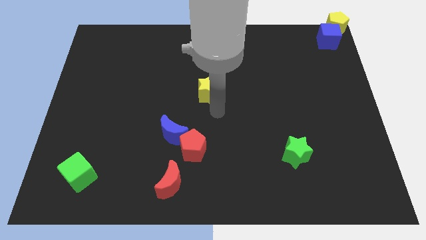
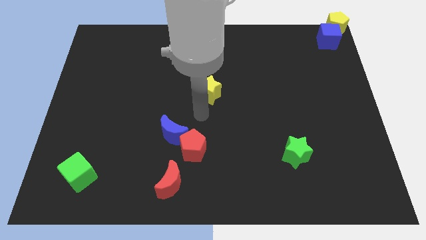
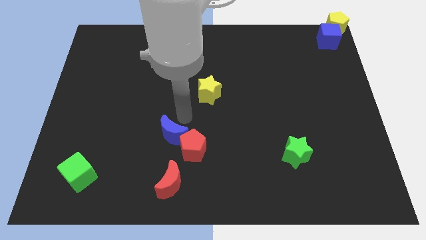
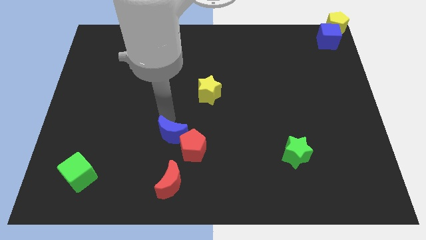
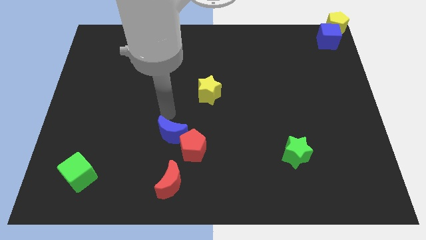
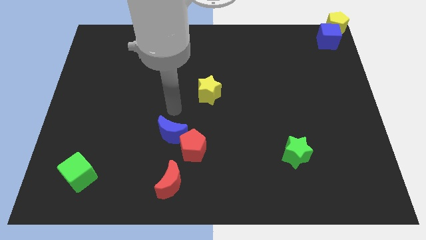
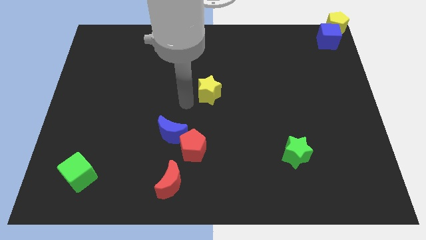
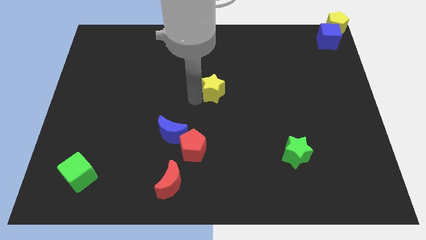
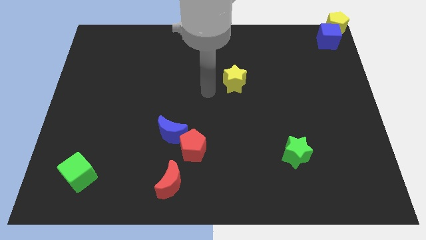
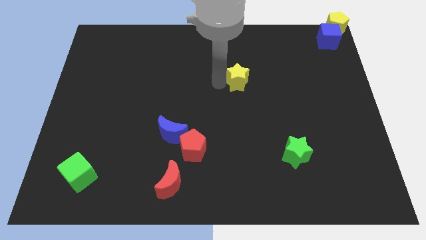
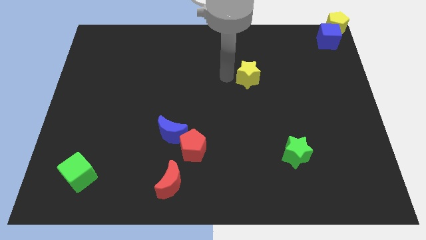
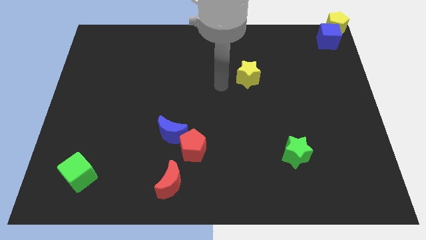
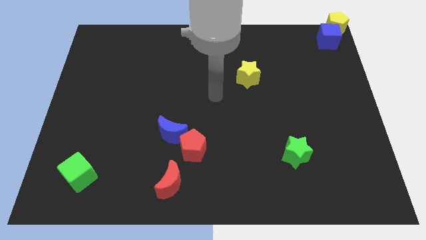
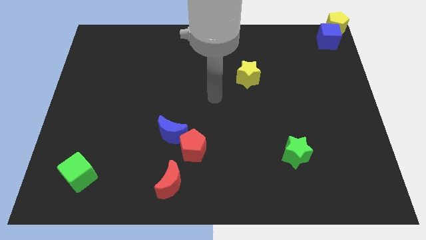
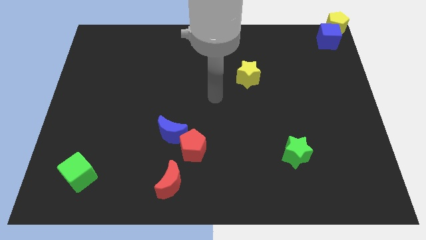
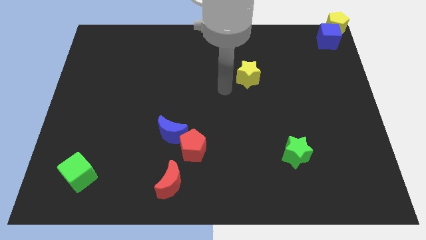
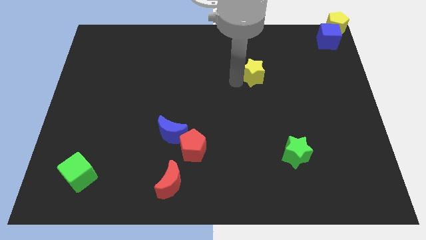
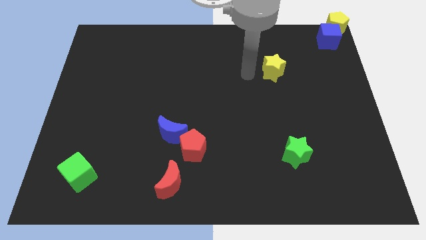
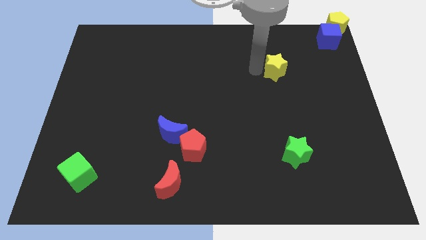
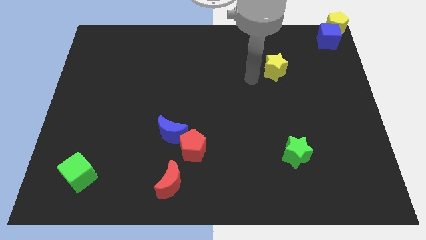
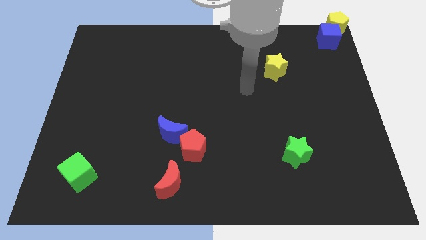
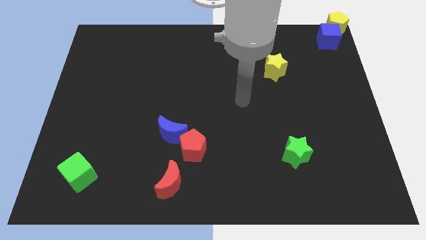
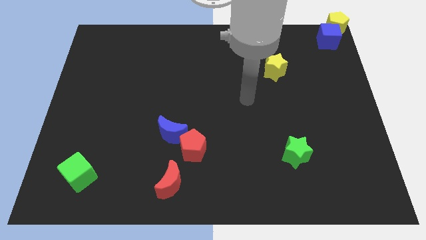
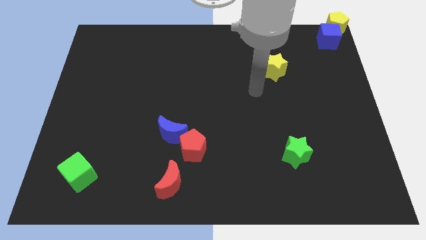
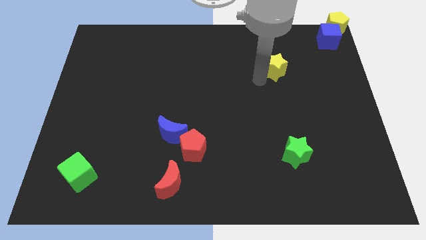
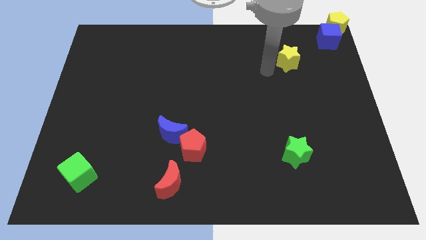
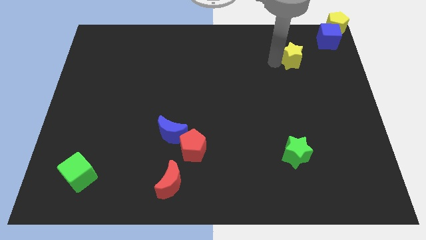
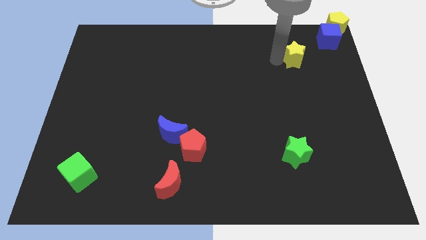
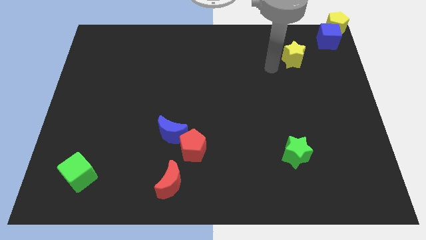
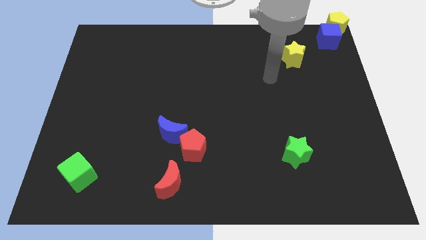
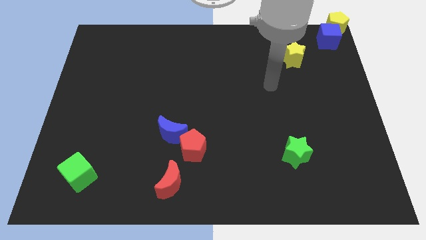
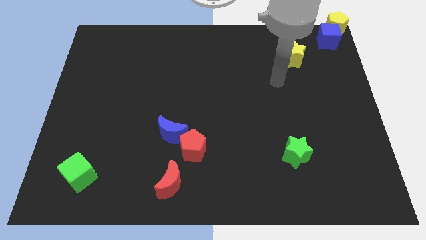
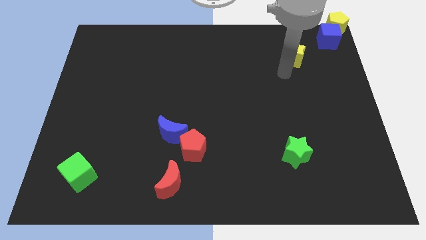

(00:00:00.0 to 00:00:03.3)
move yellow star towards blue cube

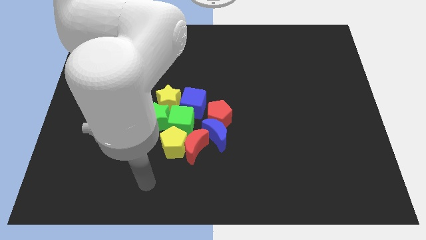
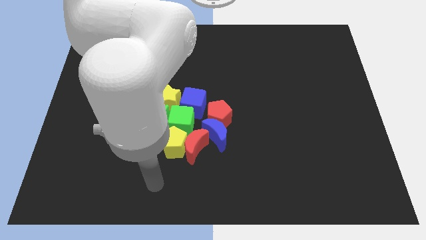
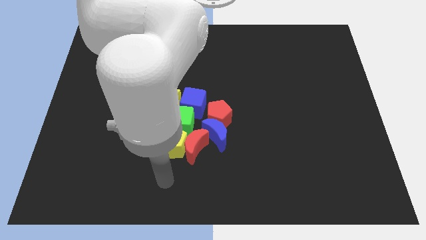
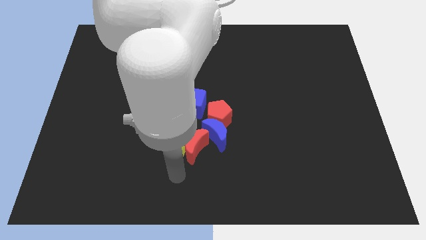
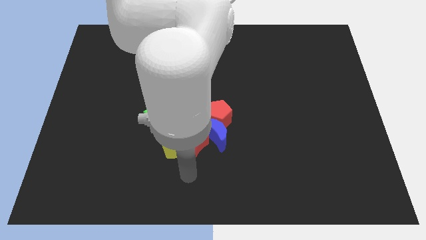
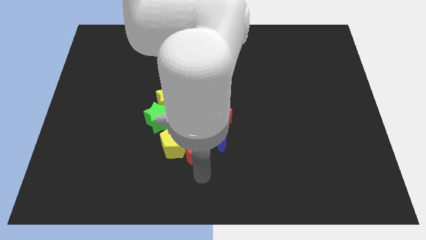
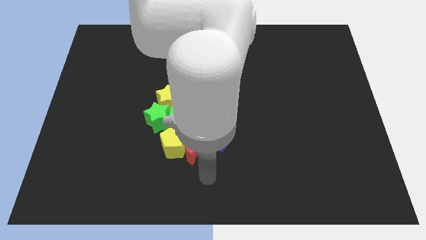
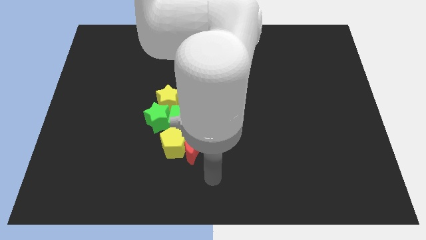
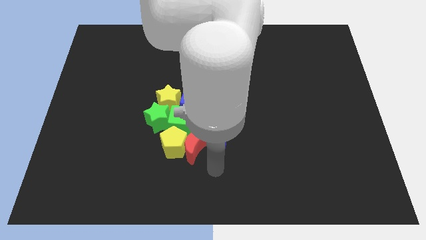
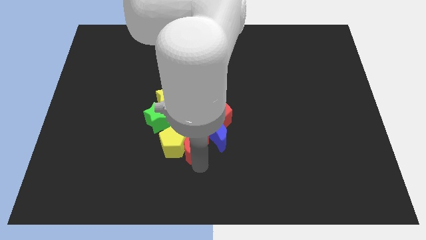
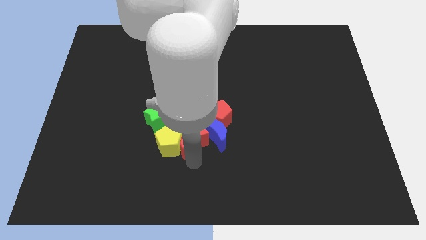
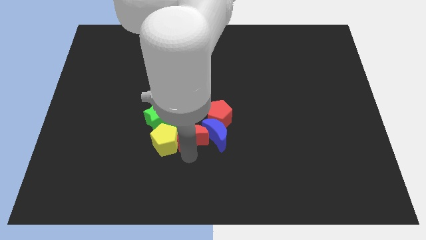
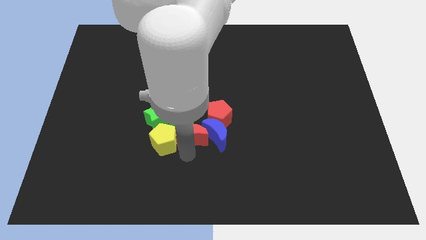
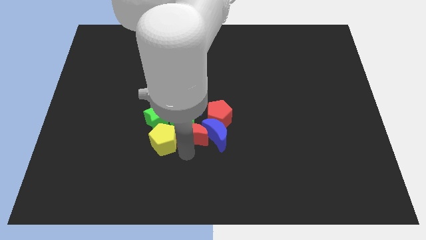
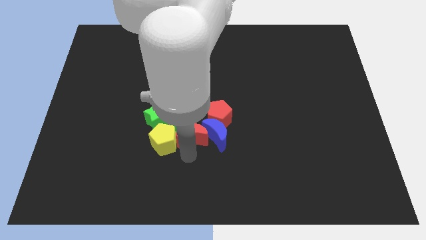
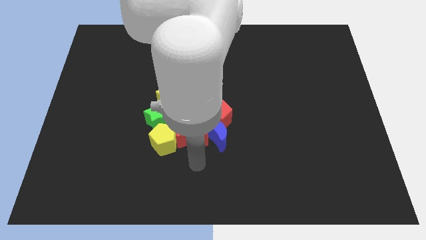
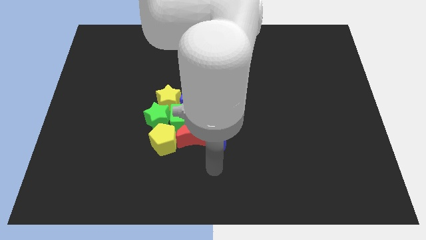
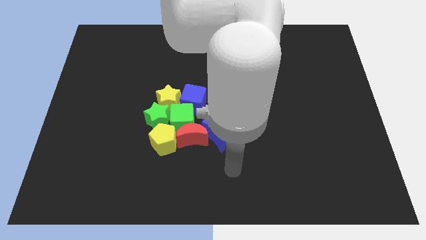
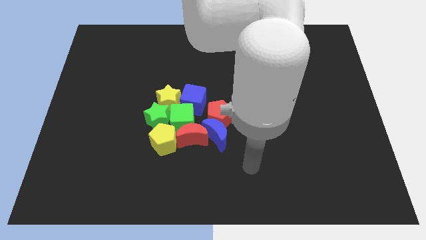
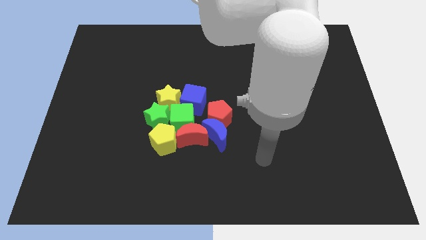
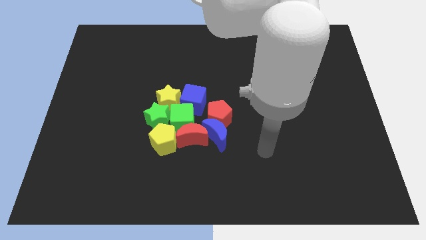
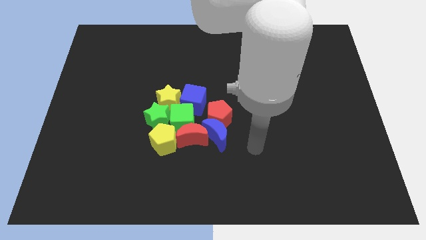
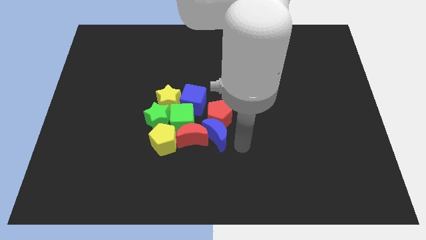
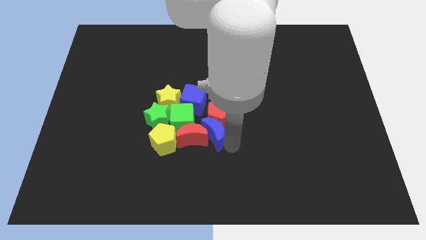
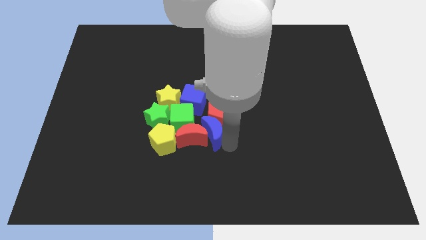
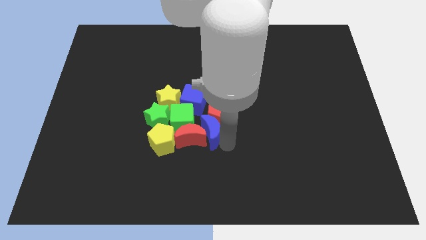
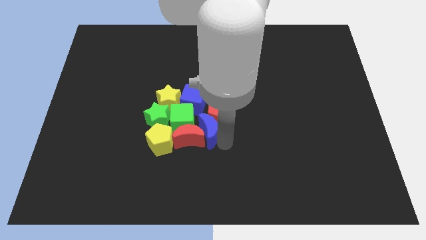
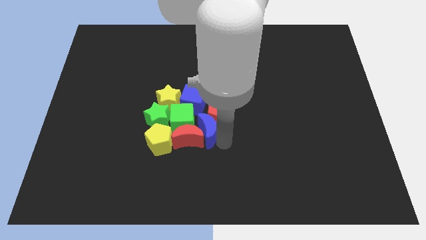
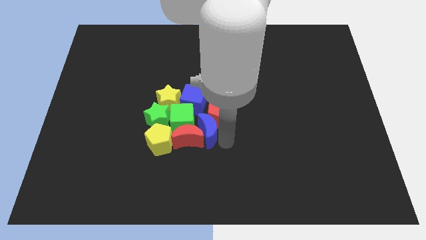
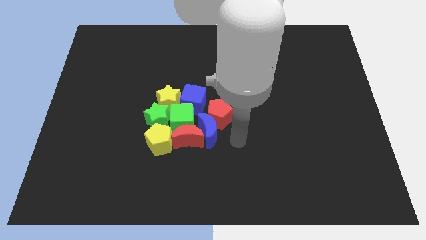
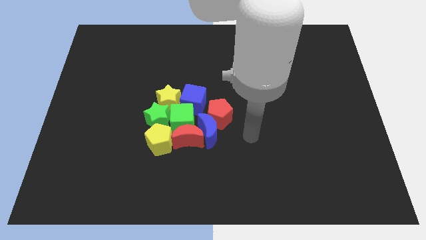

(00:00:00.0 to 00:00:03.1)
move the blocks close to each other

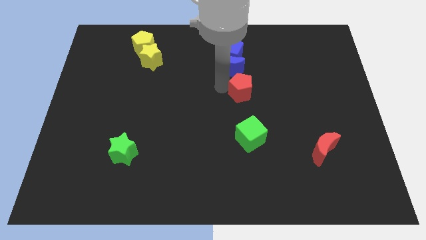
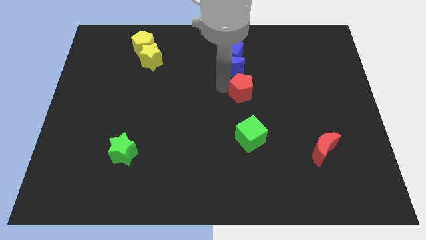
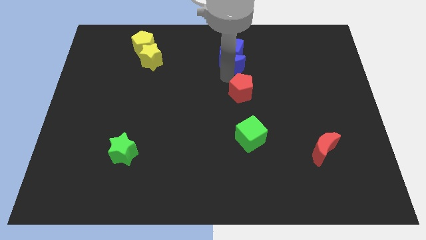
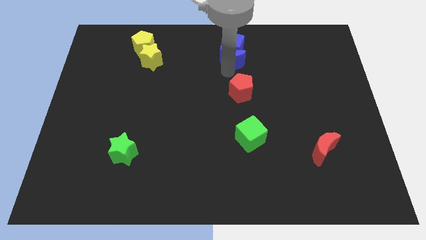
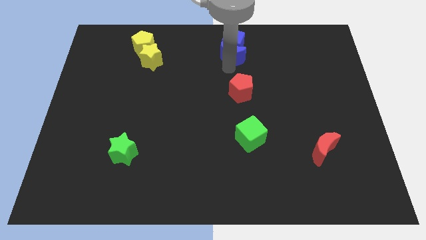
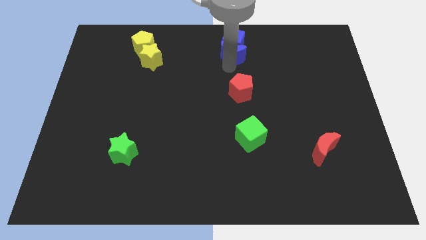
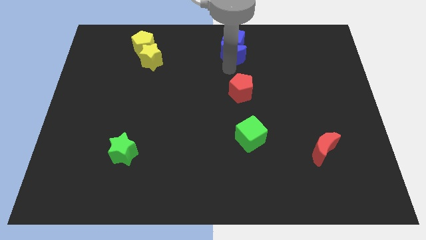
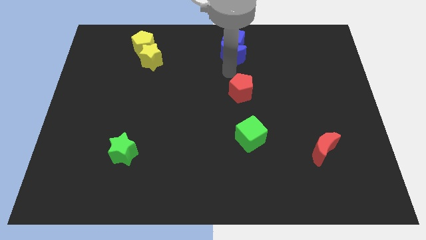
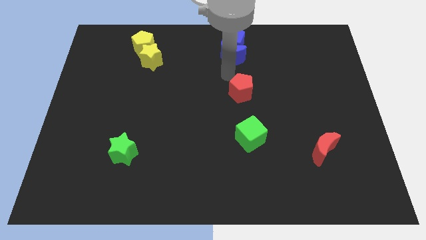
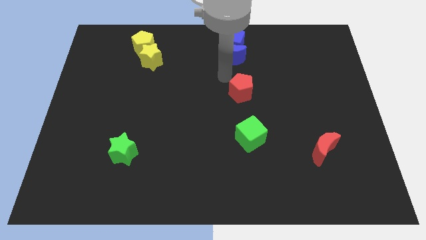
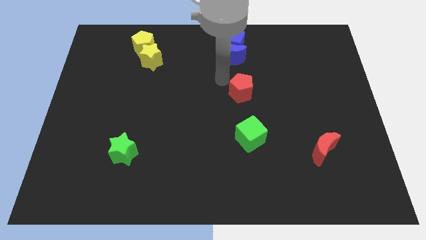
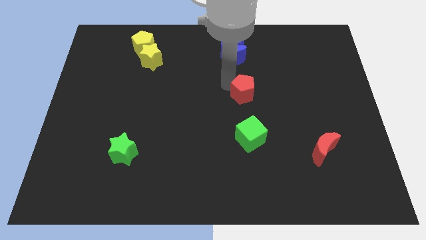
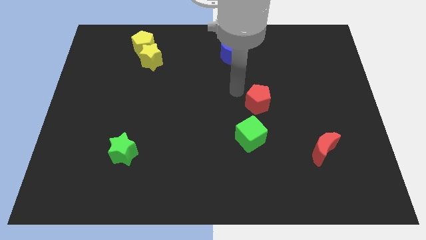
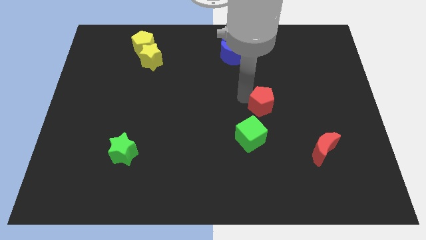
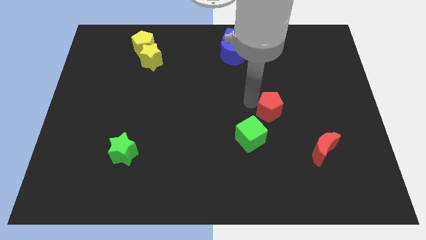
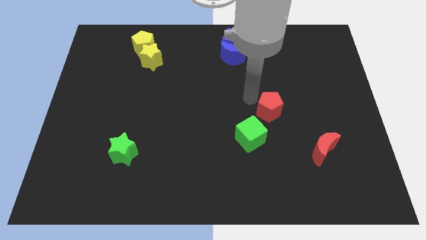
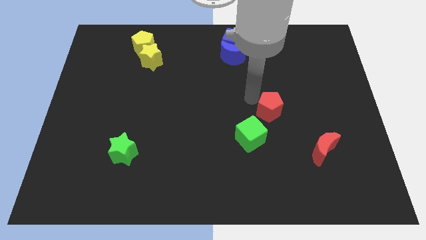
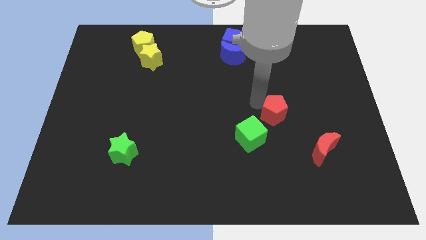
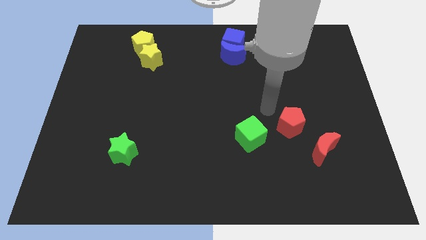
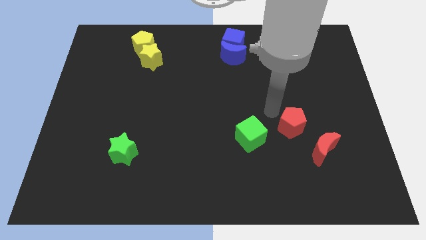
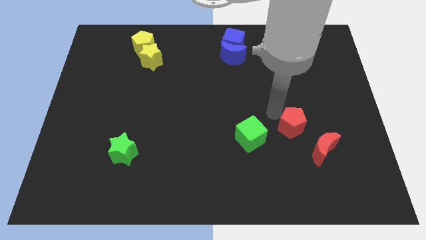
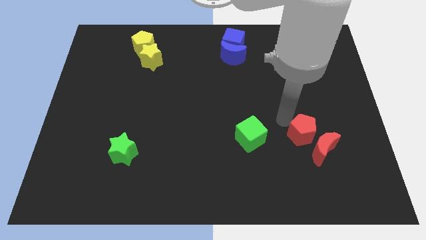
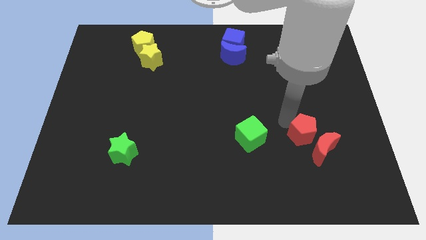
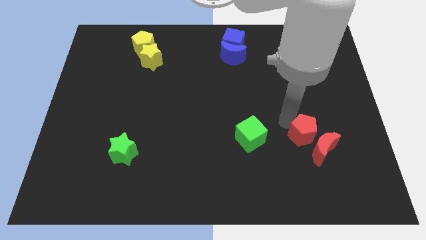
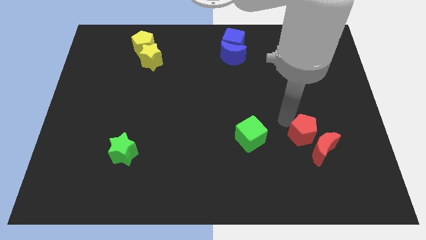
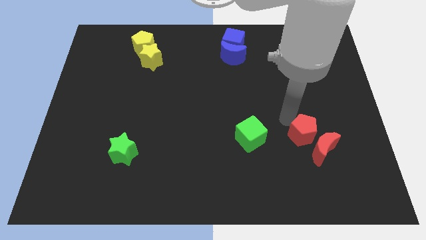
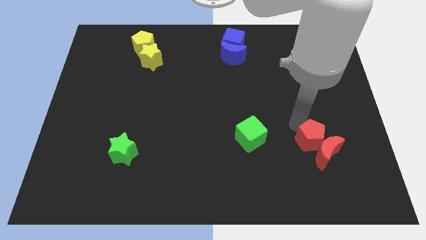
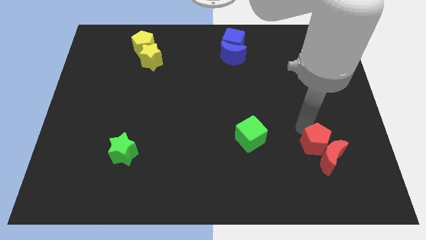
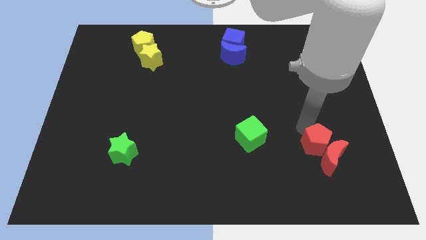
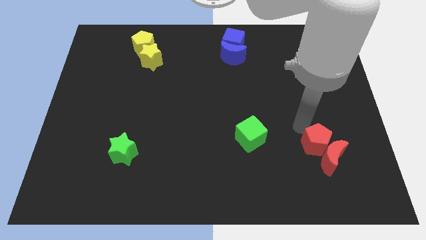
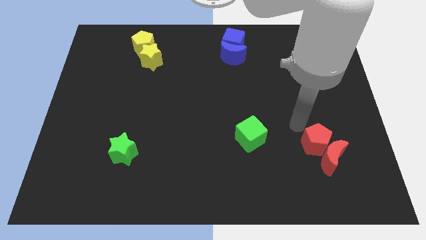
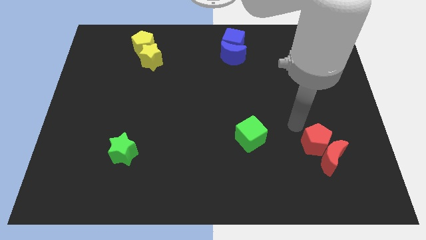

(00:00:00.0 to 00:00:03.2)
push red pentagon diagonally into the red moon
